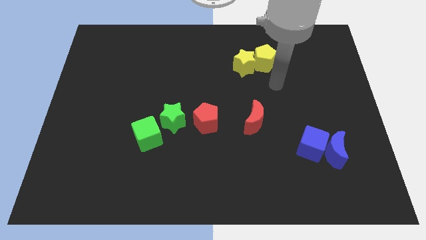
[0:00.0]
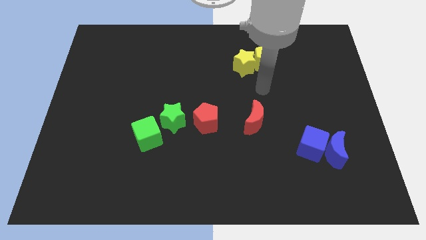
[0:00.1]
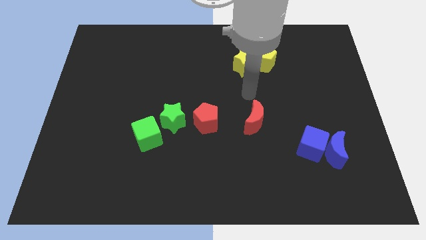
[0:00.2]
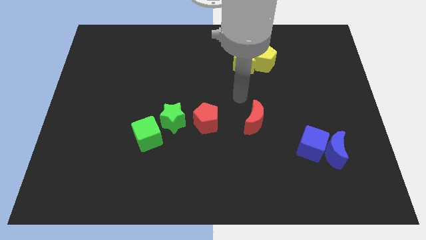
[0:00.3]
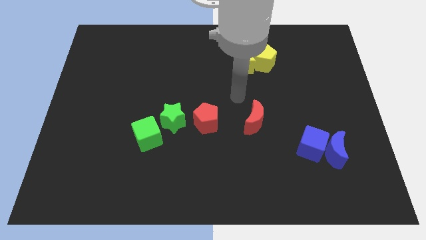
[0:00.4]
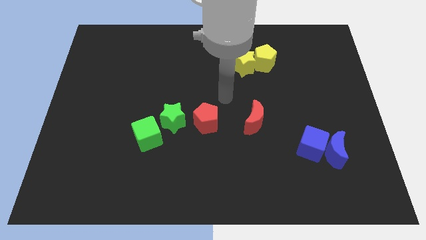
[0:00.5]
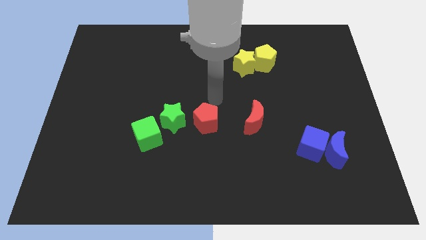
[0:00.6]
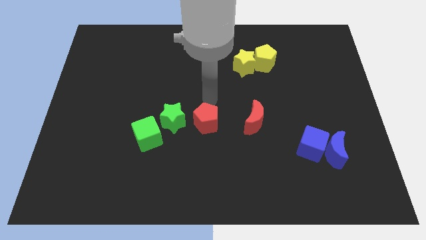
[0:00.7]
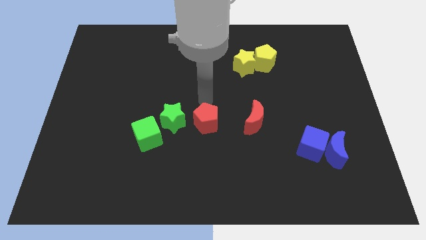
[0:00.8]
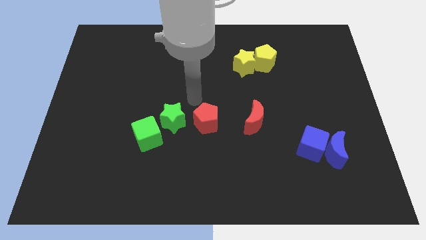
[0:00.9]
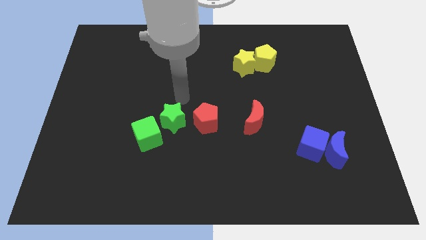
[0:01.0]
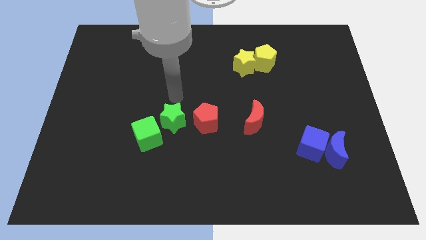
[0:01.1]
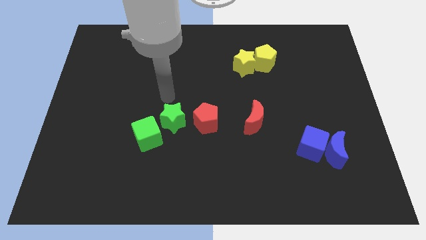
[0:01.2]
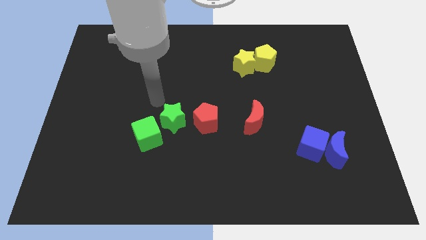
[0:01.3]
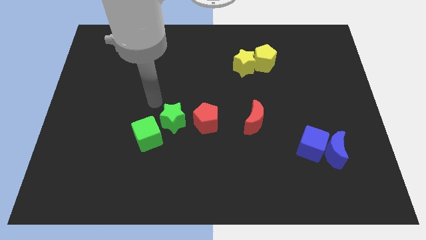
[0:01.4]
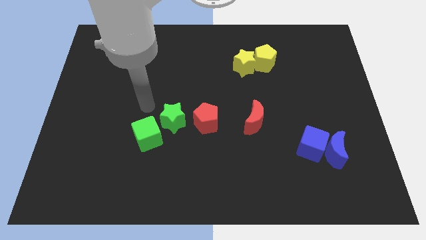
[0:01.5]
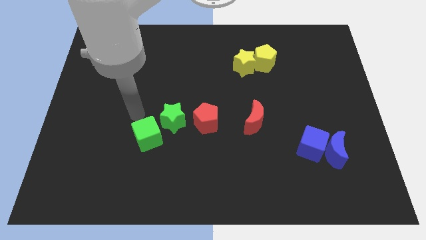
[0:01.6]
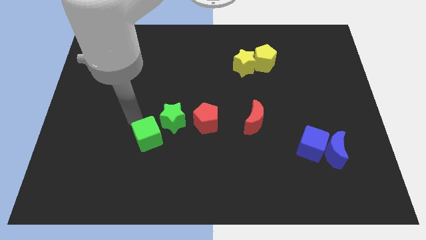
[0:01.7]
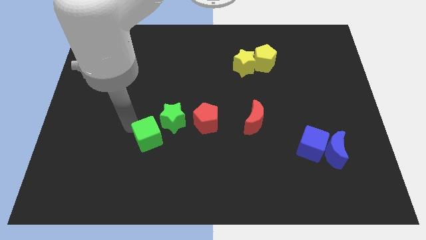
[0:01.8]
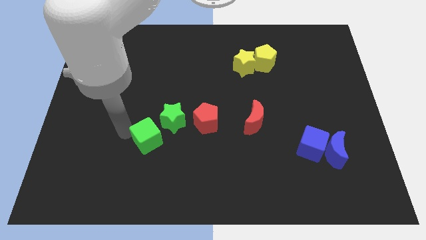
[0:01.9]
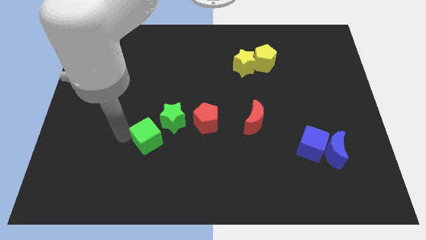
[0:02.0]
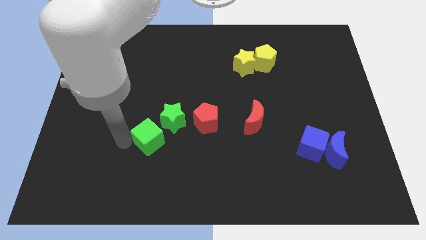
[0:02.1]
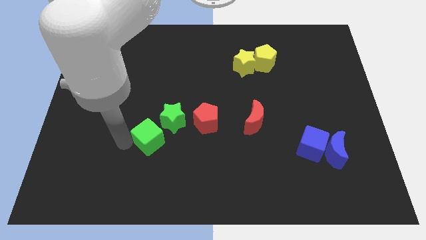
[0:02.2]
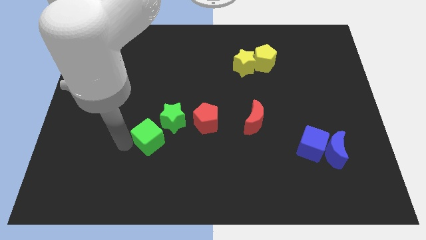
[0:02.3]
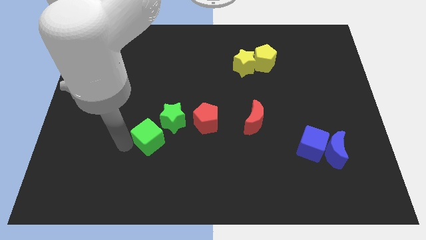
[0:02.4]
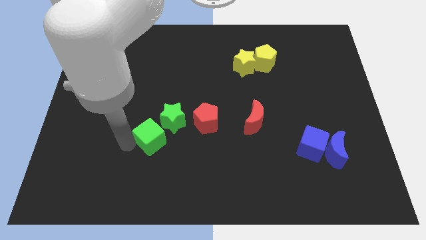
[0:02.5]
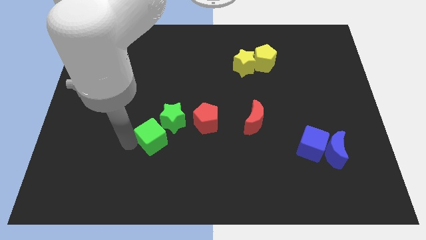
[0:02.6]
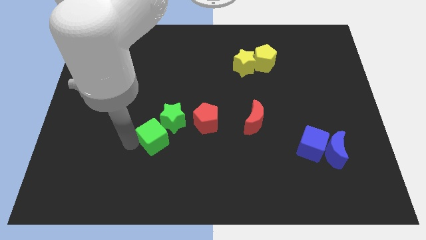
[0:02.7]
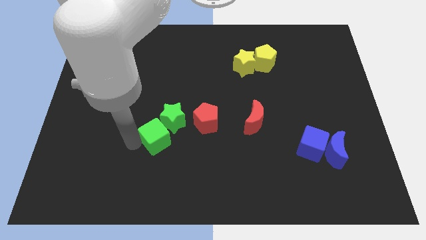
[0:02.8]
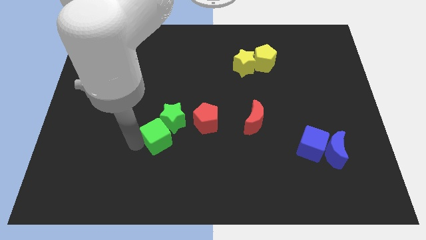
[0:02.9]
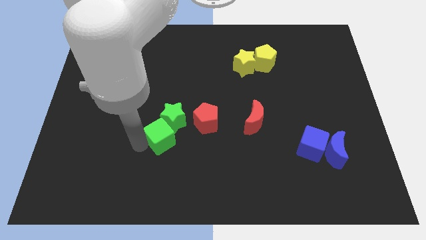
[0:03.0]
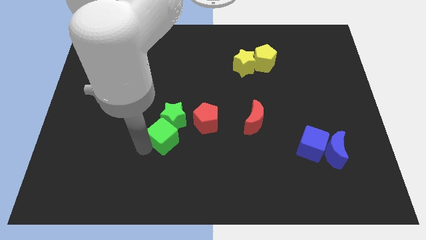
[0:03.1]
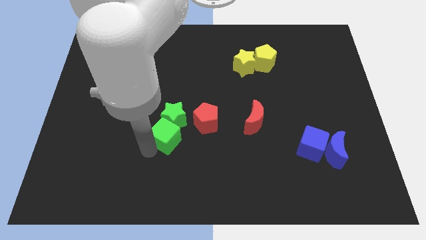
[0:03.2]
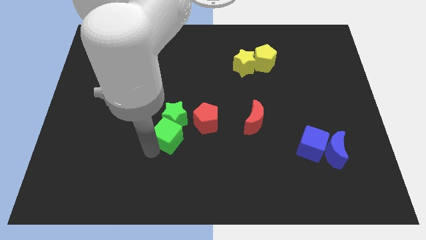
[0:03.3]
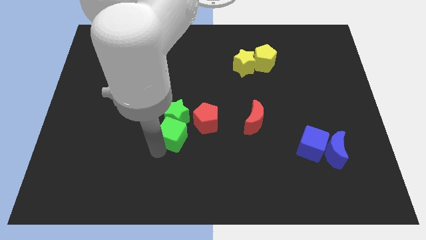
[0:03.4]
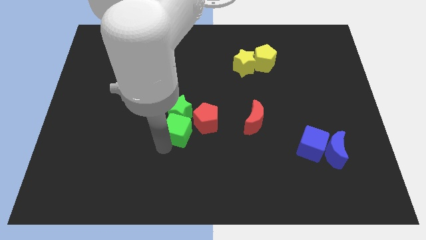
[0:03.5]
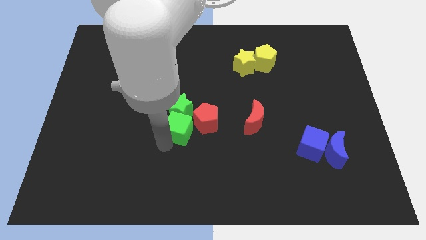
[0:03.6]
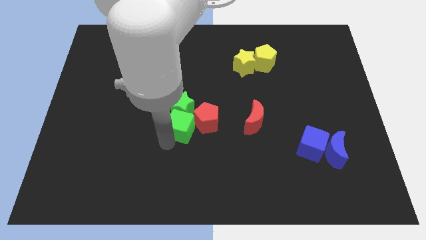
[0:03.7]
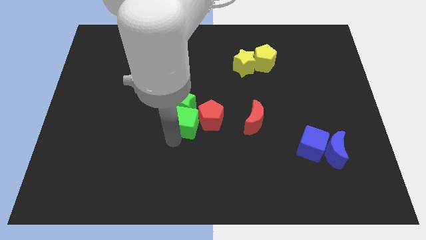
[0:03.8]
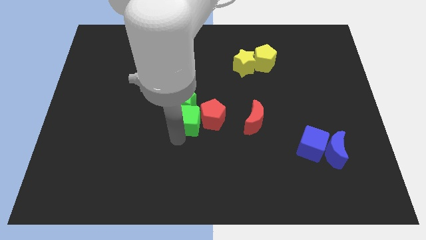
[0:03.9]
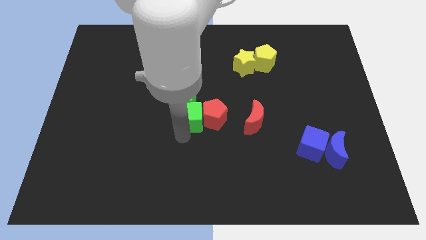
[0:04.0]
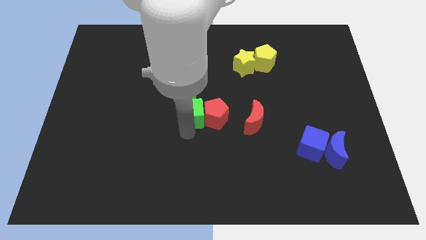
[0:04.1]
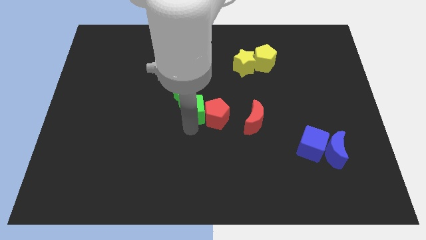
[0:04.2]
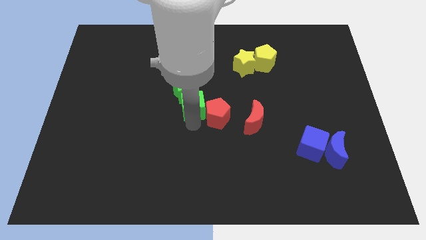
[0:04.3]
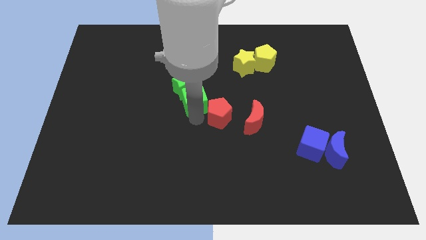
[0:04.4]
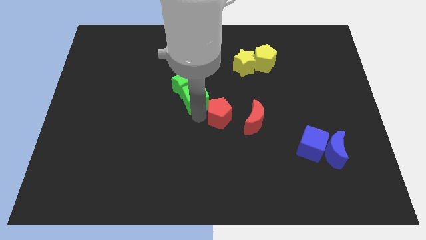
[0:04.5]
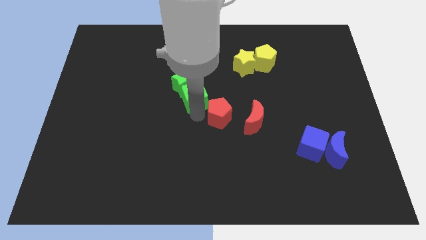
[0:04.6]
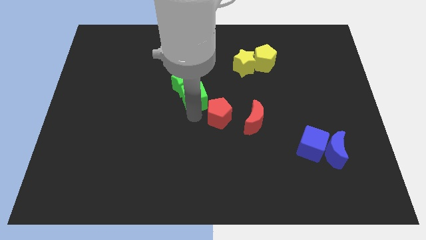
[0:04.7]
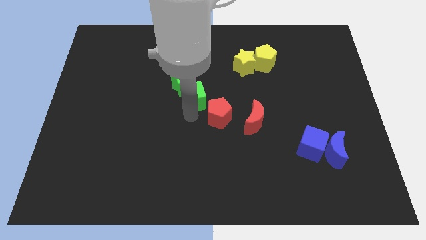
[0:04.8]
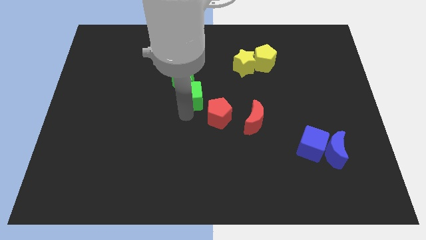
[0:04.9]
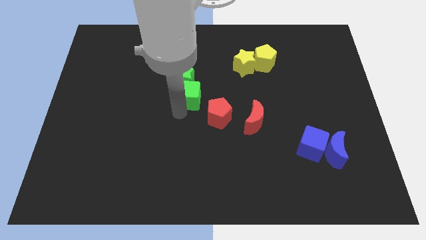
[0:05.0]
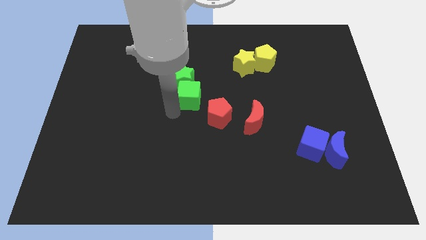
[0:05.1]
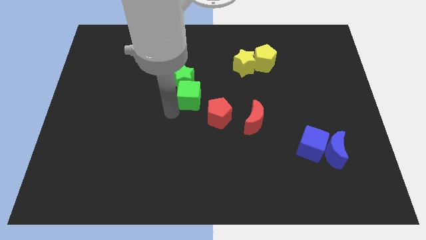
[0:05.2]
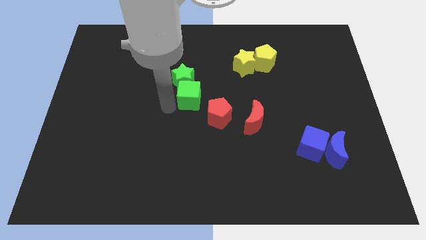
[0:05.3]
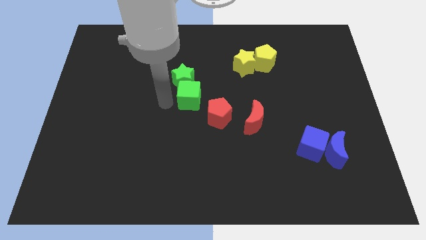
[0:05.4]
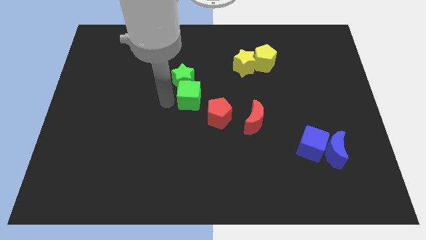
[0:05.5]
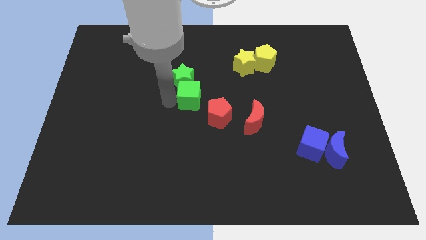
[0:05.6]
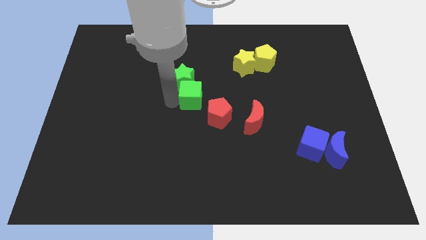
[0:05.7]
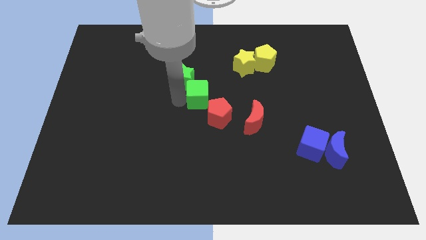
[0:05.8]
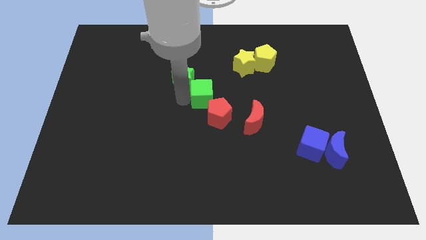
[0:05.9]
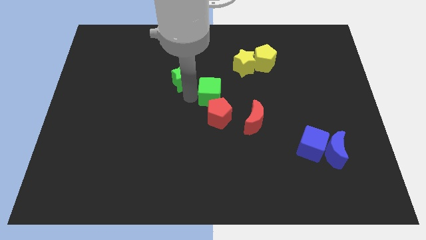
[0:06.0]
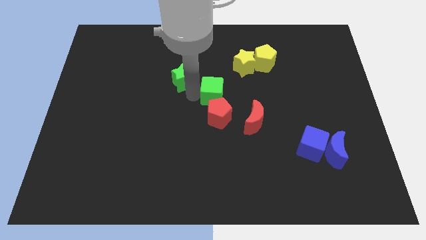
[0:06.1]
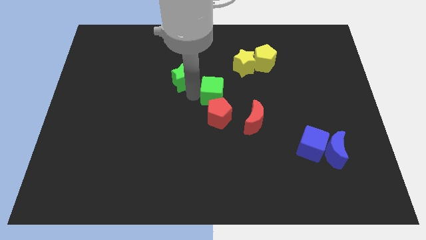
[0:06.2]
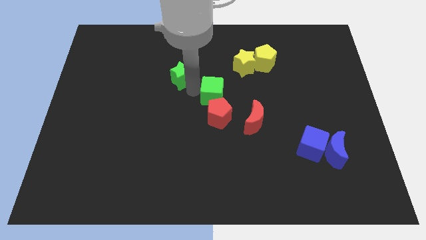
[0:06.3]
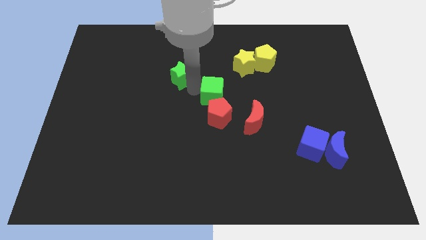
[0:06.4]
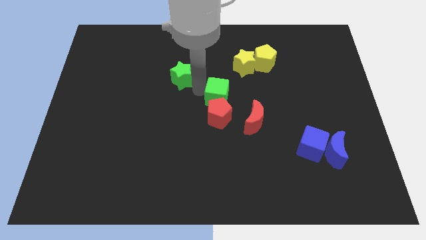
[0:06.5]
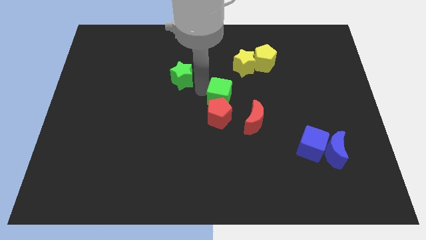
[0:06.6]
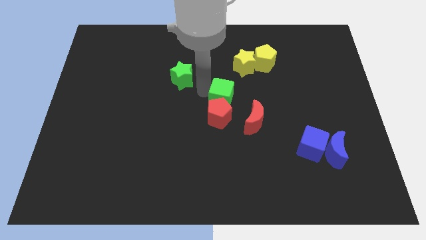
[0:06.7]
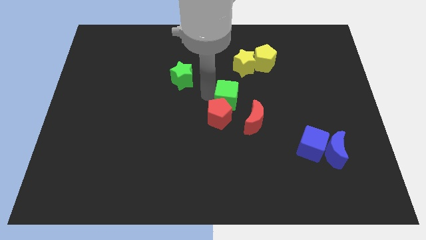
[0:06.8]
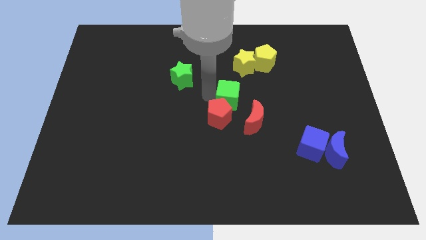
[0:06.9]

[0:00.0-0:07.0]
push green star and green cube to the top

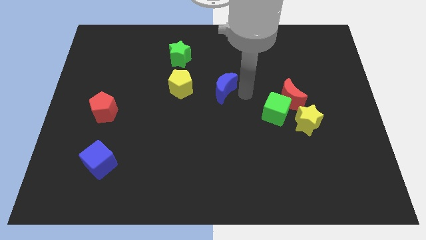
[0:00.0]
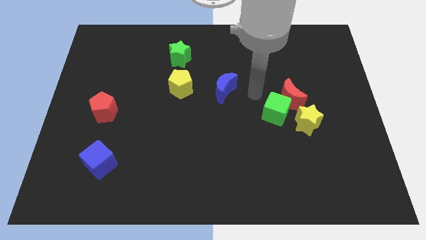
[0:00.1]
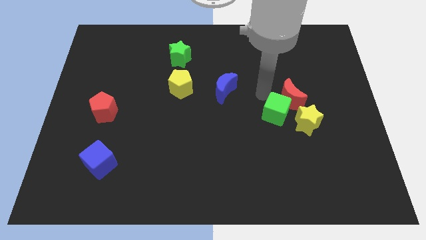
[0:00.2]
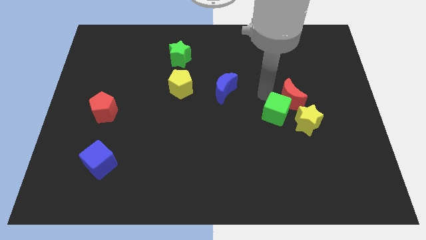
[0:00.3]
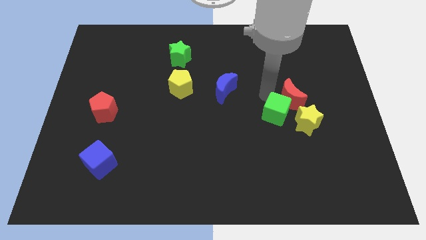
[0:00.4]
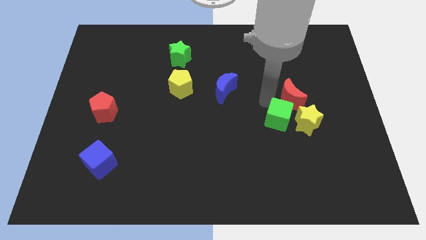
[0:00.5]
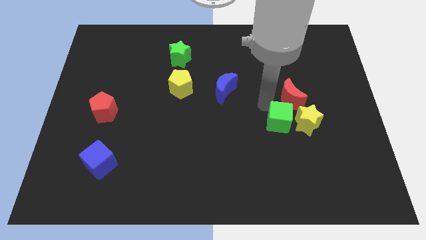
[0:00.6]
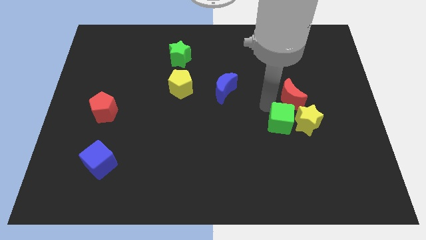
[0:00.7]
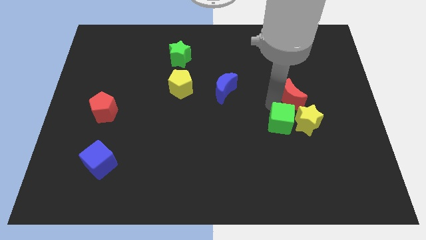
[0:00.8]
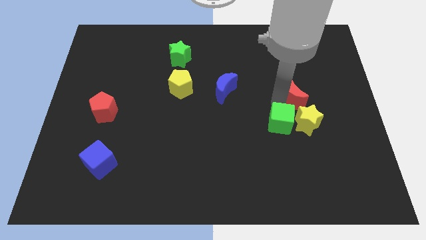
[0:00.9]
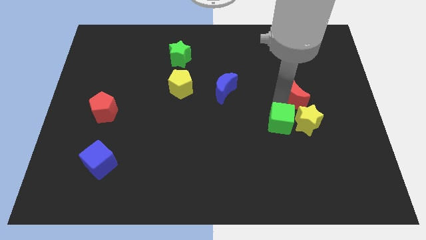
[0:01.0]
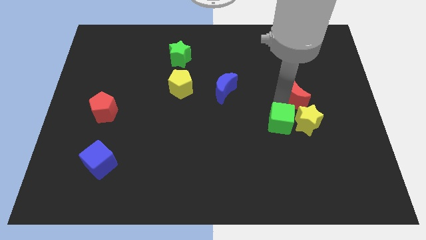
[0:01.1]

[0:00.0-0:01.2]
move the green cube to the left side of the yellow star

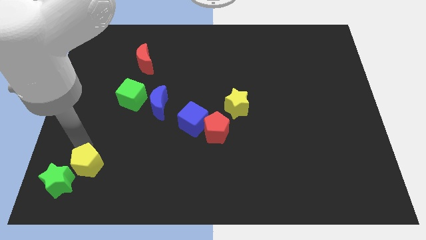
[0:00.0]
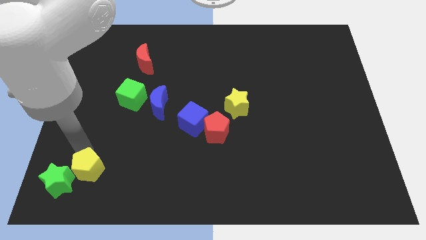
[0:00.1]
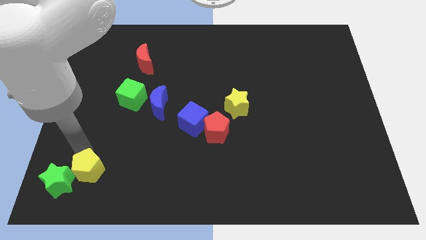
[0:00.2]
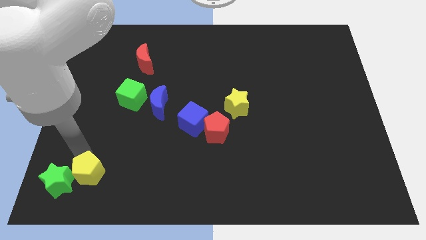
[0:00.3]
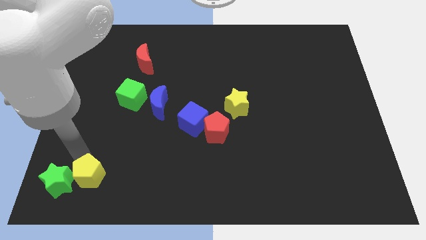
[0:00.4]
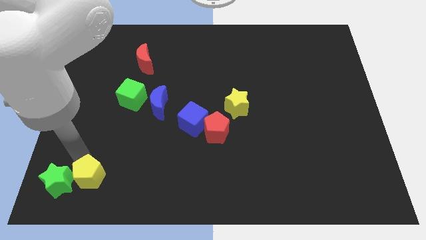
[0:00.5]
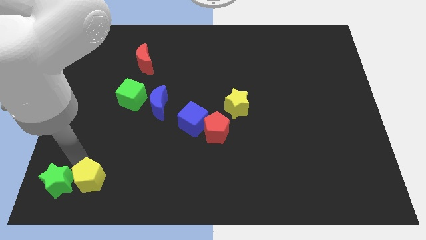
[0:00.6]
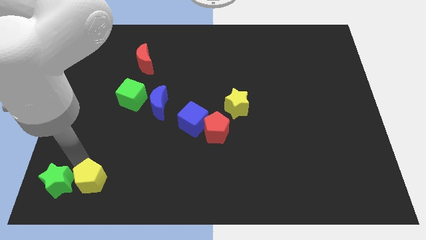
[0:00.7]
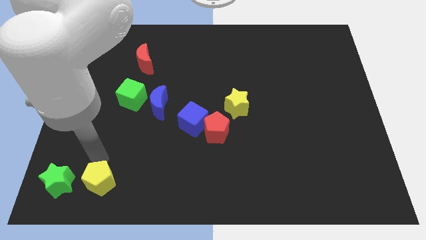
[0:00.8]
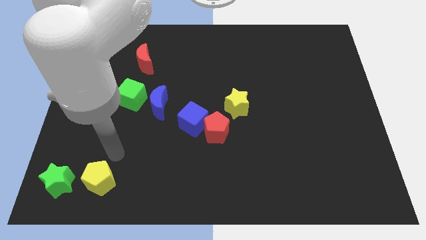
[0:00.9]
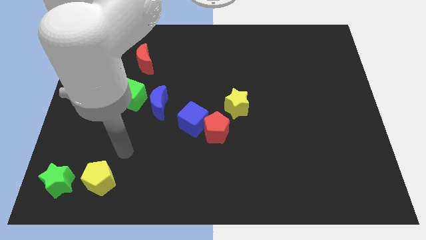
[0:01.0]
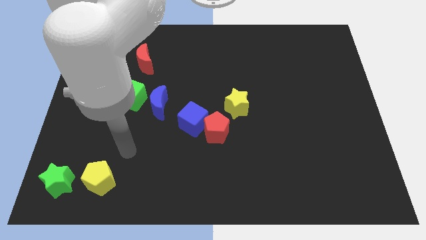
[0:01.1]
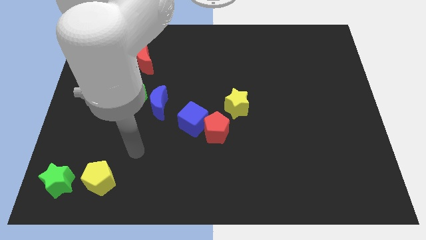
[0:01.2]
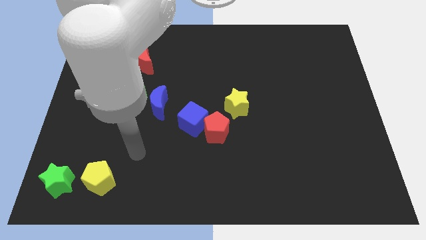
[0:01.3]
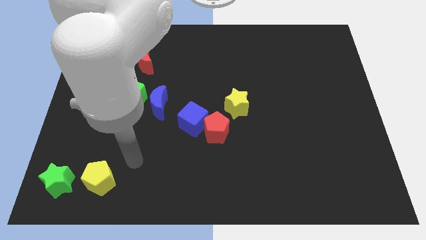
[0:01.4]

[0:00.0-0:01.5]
place the yellow pentagon vertically below the green cube
